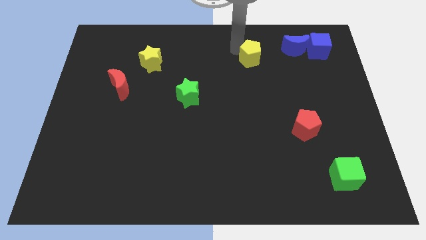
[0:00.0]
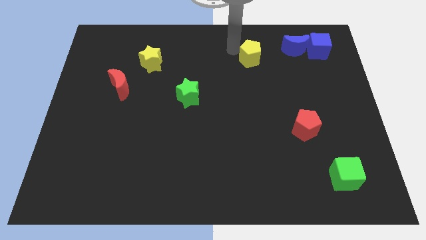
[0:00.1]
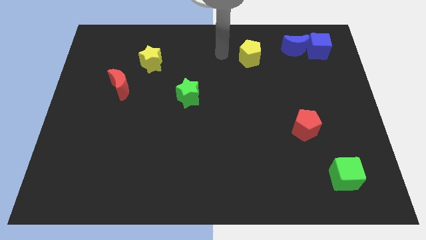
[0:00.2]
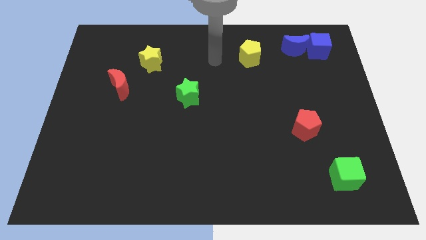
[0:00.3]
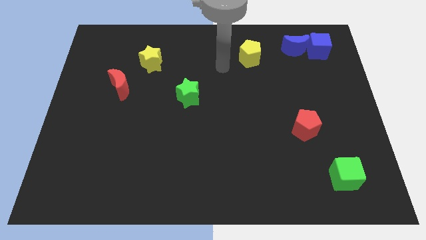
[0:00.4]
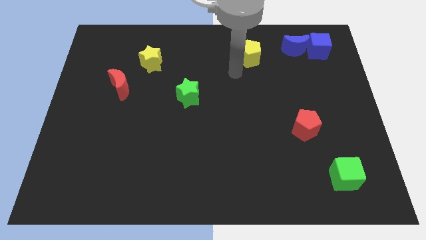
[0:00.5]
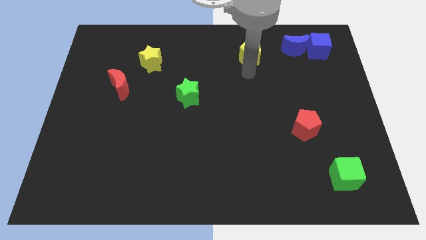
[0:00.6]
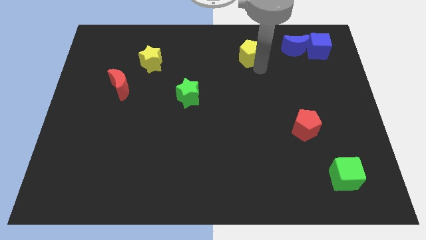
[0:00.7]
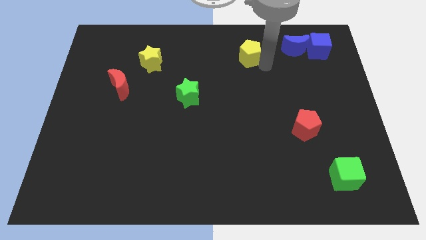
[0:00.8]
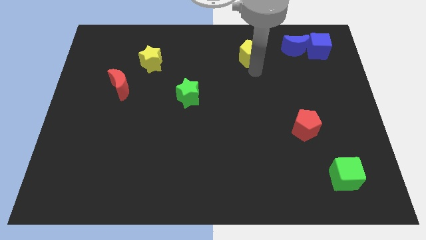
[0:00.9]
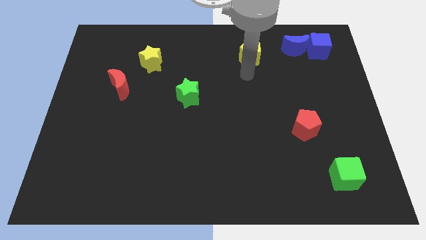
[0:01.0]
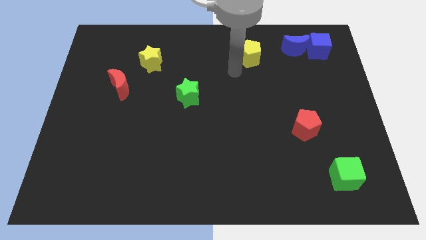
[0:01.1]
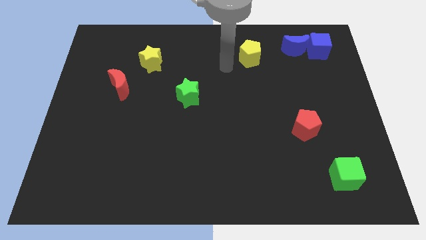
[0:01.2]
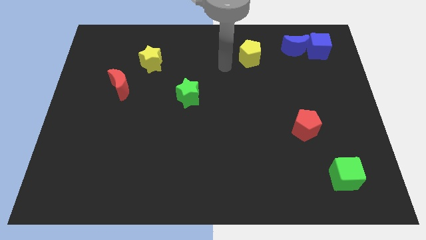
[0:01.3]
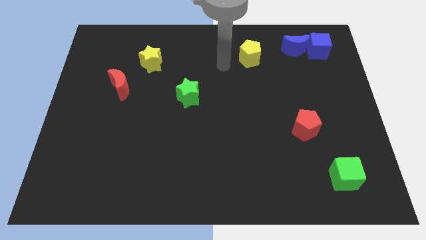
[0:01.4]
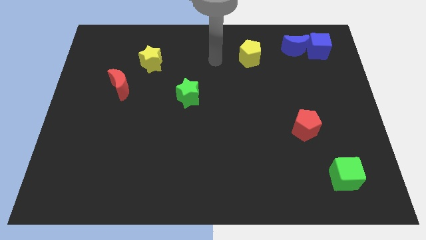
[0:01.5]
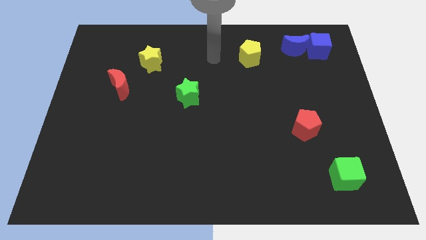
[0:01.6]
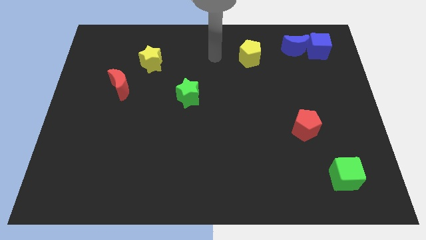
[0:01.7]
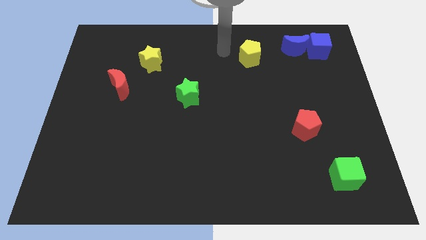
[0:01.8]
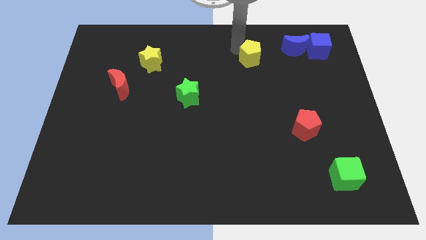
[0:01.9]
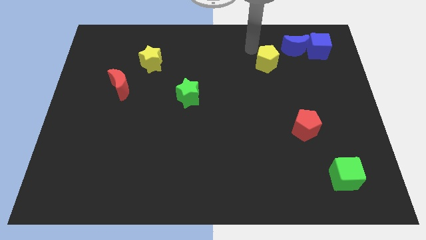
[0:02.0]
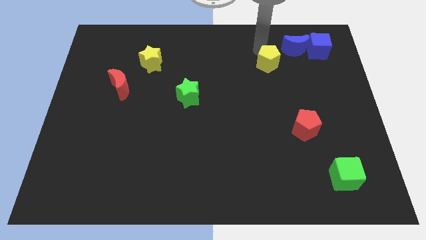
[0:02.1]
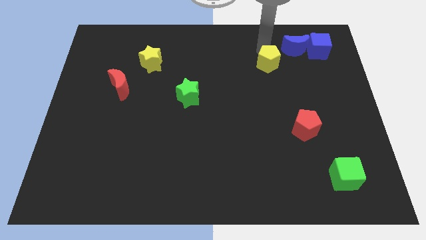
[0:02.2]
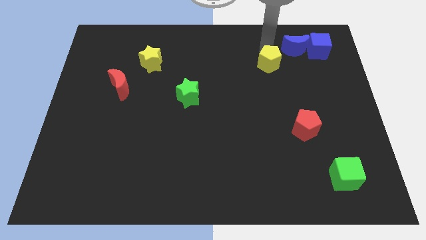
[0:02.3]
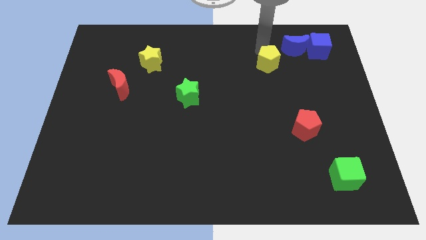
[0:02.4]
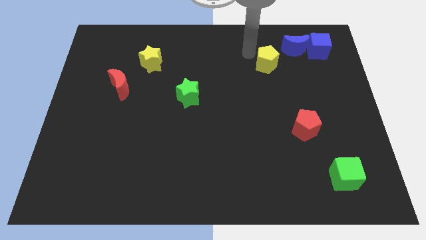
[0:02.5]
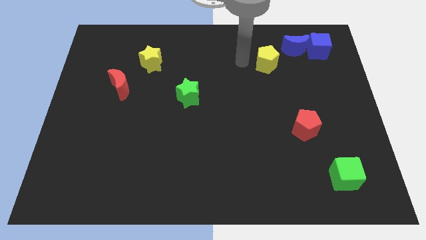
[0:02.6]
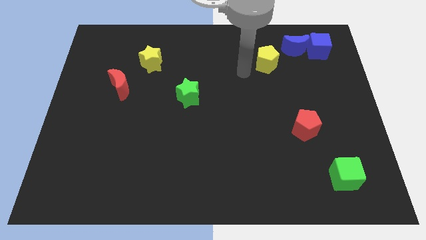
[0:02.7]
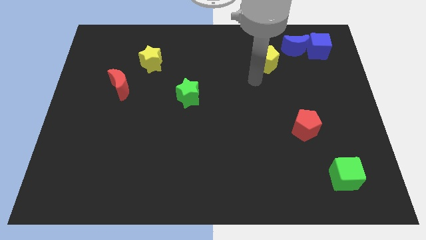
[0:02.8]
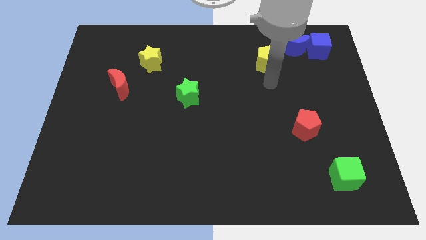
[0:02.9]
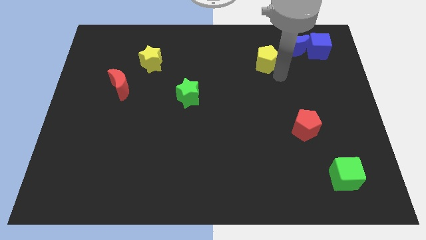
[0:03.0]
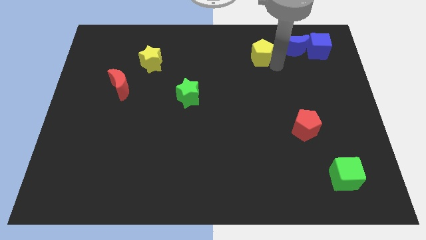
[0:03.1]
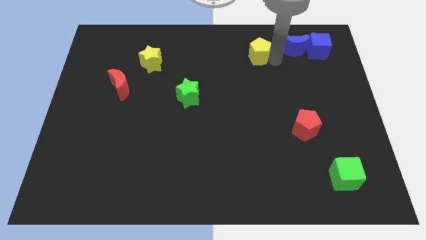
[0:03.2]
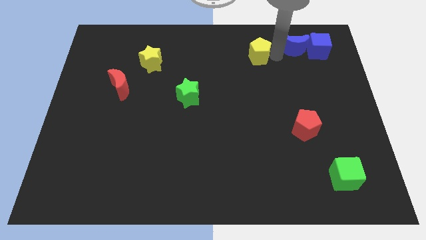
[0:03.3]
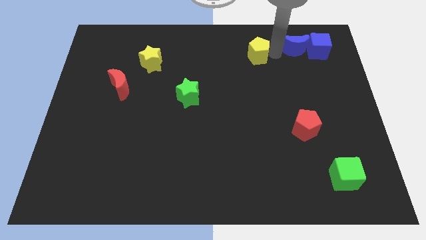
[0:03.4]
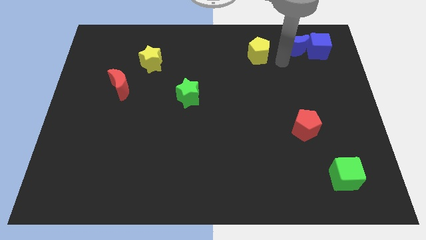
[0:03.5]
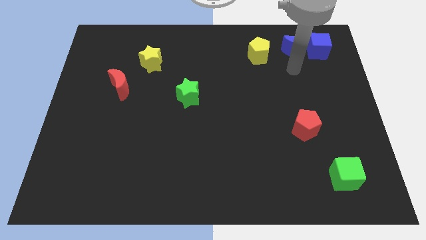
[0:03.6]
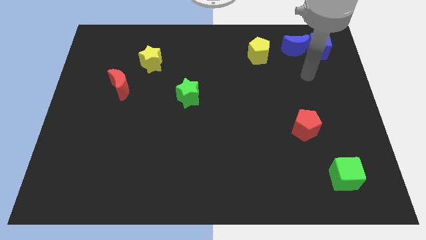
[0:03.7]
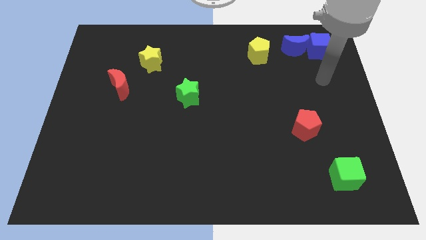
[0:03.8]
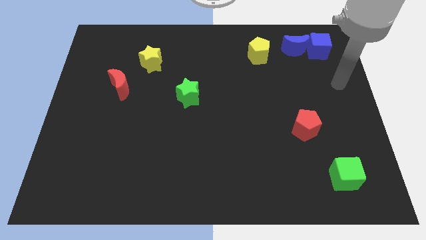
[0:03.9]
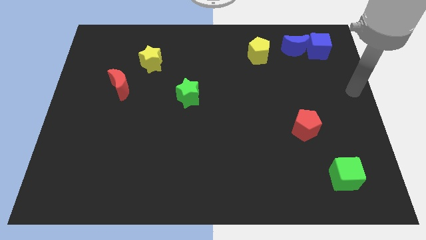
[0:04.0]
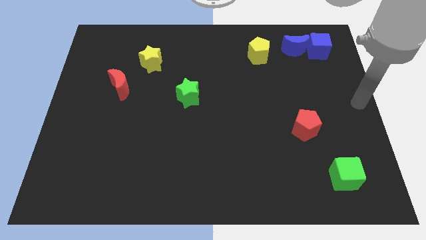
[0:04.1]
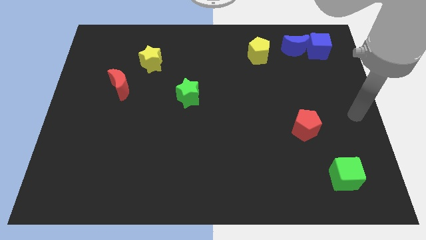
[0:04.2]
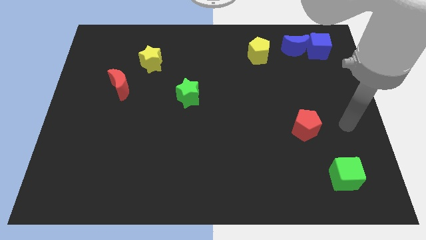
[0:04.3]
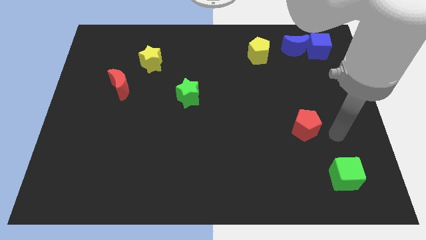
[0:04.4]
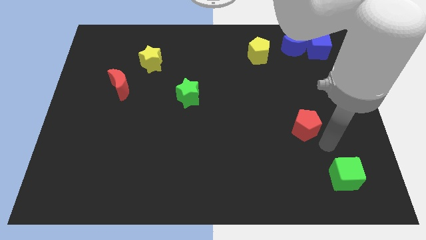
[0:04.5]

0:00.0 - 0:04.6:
place yellow pentagon near blue crescent

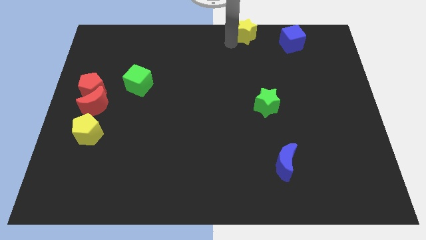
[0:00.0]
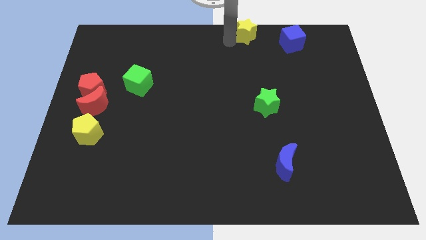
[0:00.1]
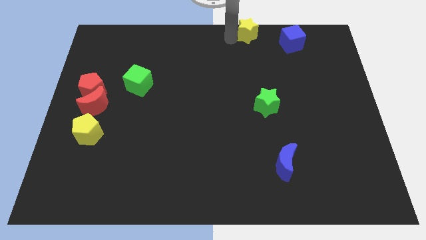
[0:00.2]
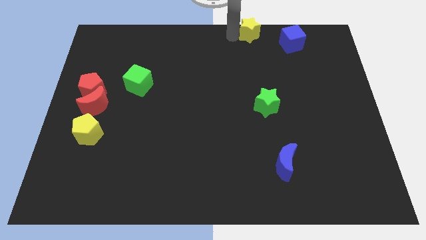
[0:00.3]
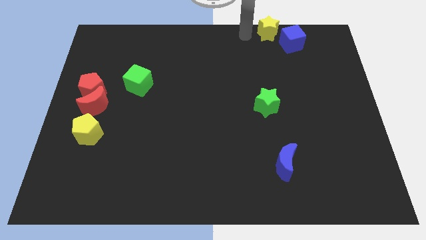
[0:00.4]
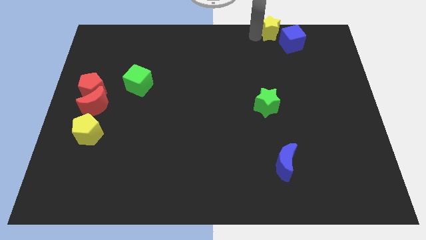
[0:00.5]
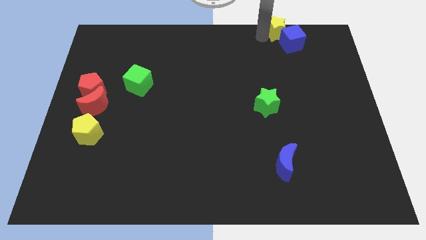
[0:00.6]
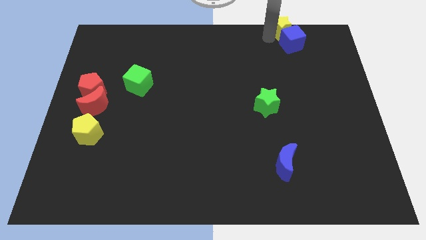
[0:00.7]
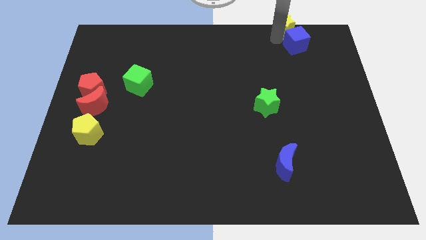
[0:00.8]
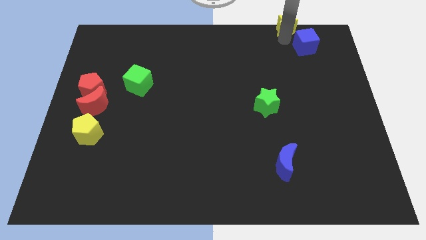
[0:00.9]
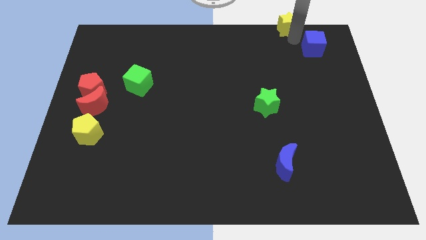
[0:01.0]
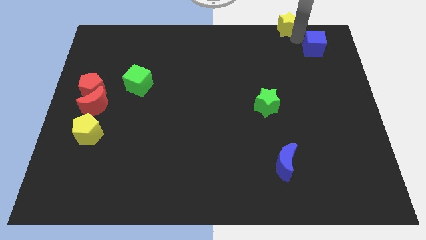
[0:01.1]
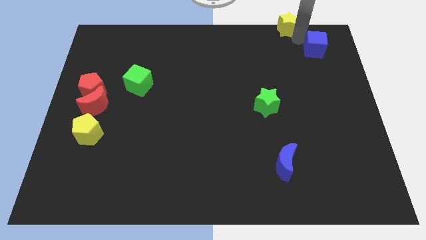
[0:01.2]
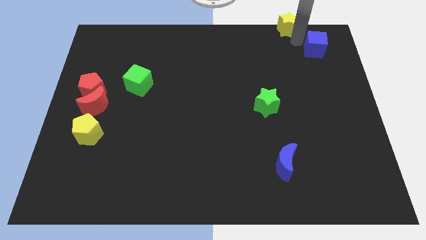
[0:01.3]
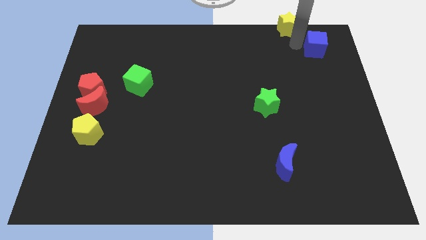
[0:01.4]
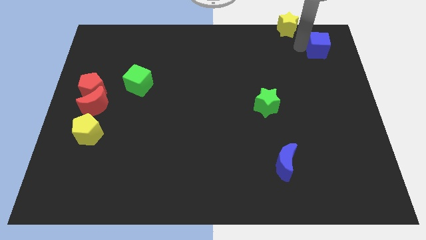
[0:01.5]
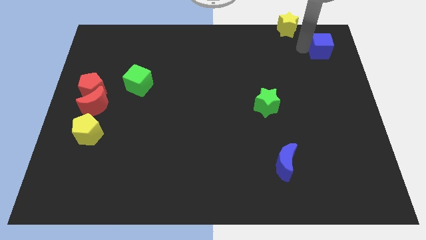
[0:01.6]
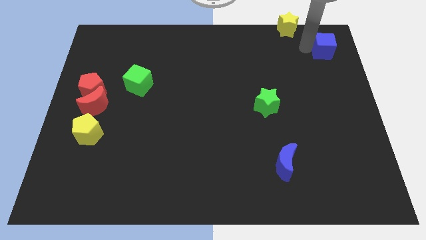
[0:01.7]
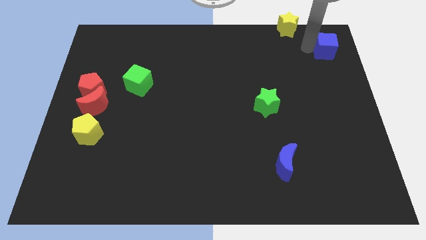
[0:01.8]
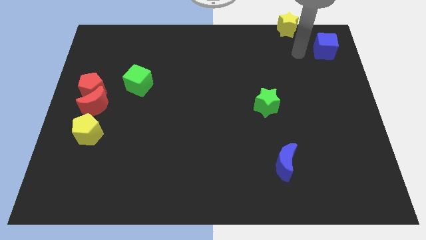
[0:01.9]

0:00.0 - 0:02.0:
place the blue cube diagonally to the top right of the green star

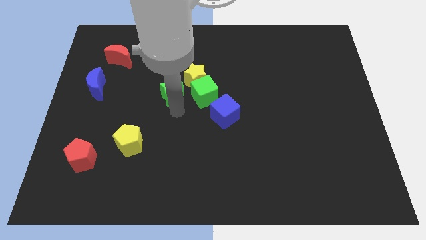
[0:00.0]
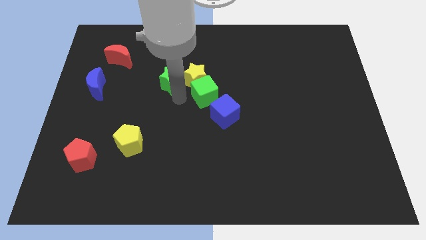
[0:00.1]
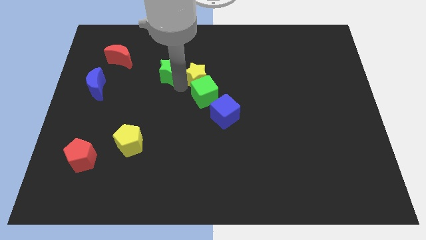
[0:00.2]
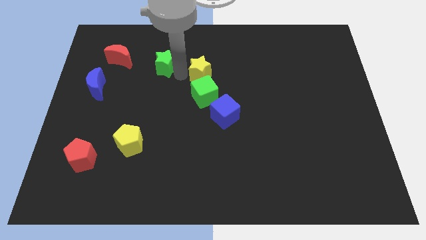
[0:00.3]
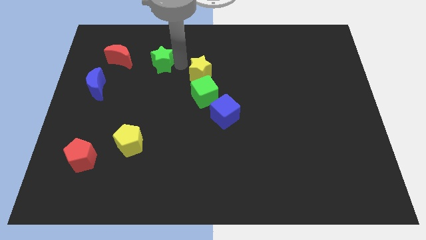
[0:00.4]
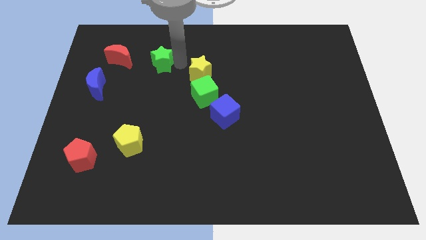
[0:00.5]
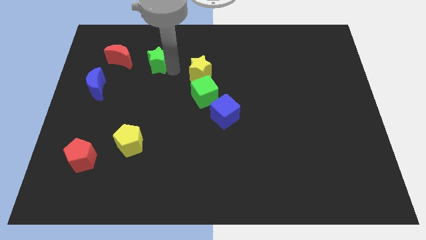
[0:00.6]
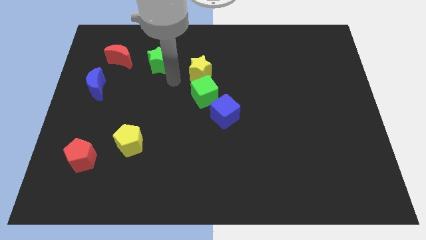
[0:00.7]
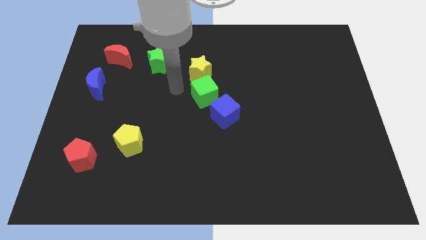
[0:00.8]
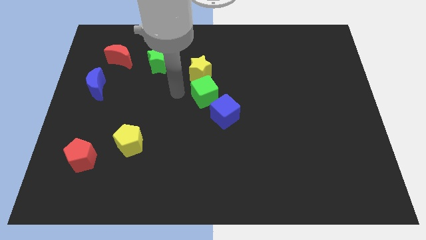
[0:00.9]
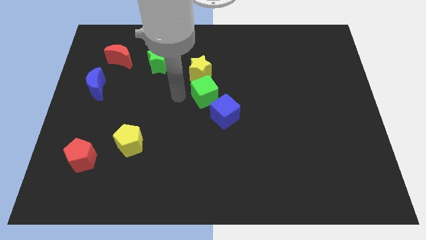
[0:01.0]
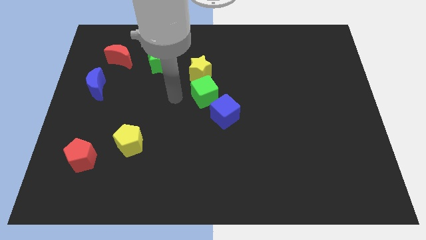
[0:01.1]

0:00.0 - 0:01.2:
move the green star parallel right to the red moon

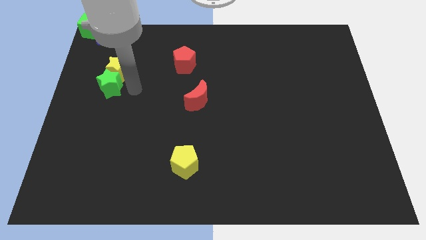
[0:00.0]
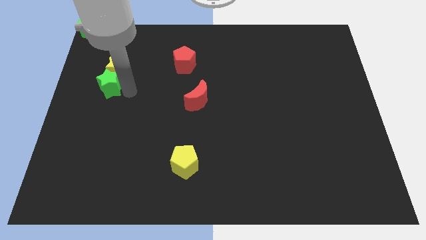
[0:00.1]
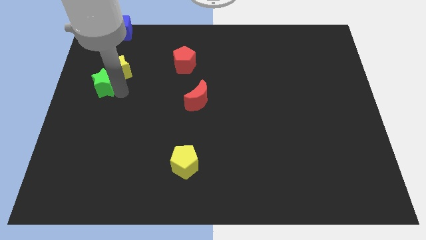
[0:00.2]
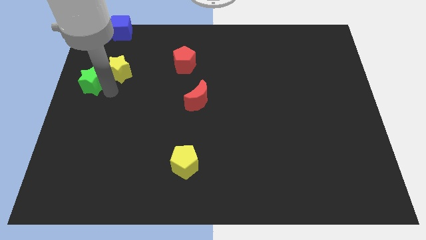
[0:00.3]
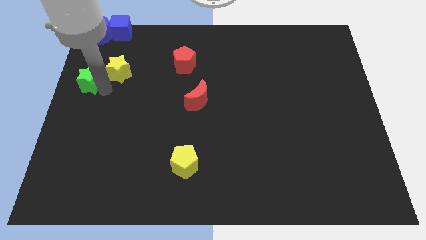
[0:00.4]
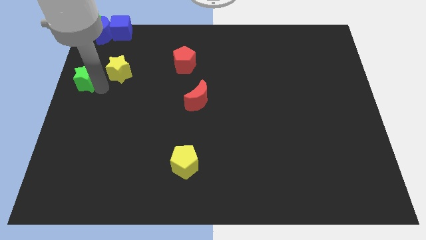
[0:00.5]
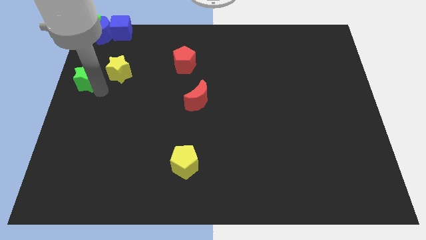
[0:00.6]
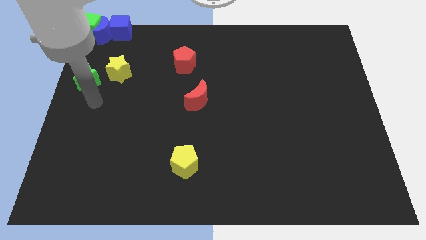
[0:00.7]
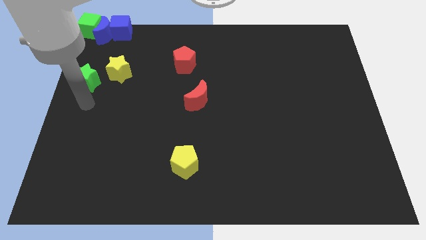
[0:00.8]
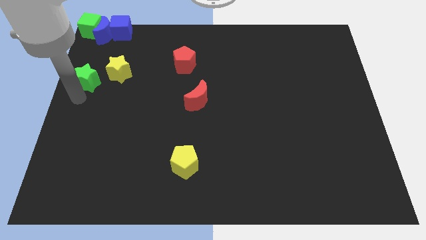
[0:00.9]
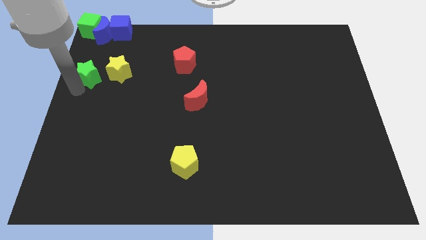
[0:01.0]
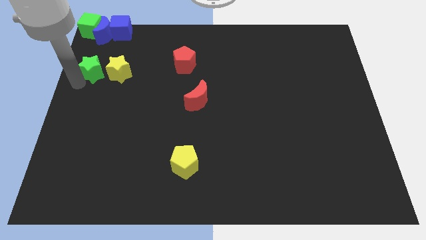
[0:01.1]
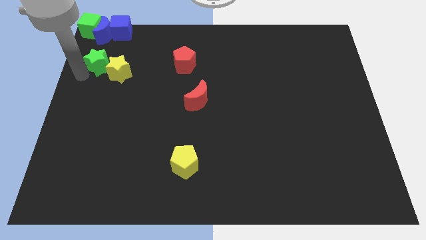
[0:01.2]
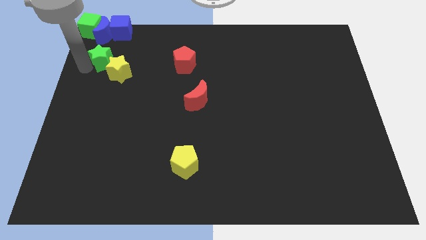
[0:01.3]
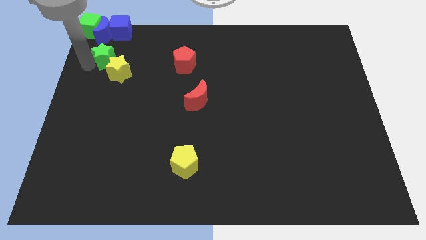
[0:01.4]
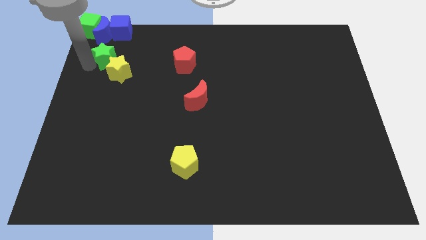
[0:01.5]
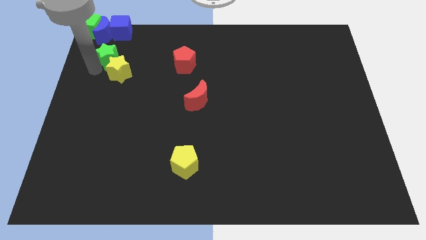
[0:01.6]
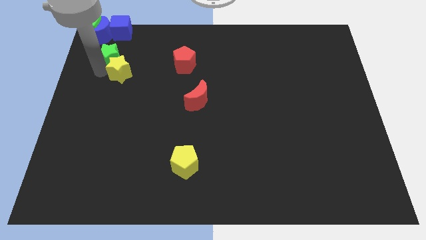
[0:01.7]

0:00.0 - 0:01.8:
move green star to the bottom of the blue moon
